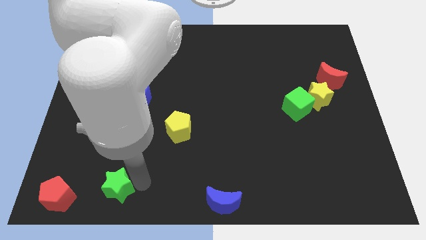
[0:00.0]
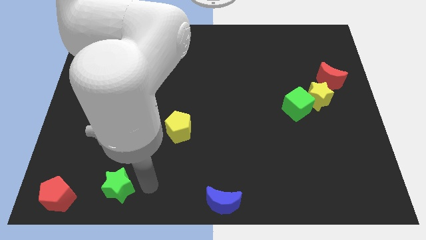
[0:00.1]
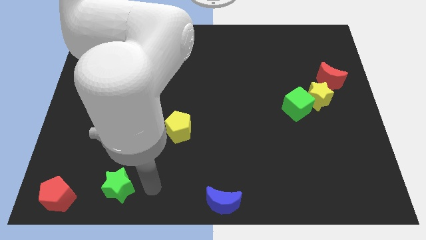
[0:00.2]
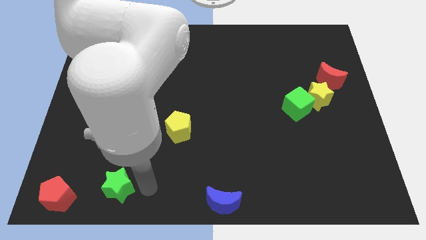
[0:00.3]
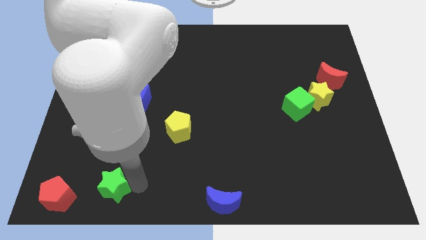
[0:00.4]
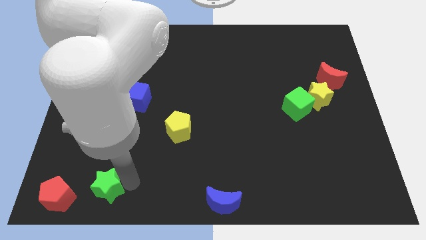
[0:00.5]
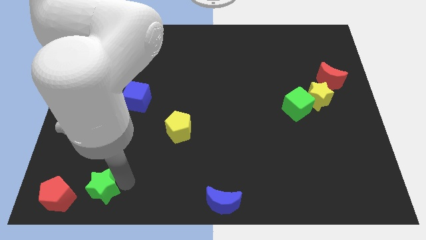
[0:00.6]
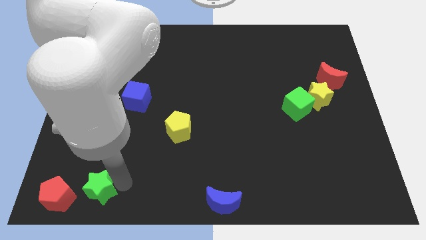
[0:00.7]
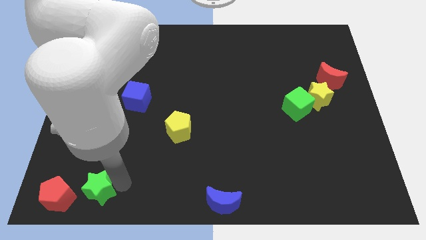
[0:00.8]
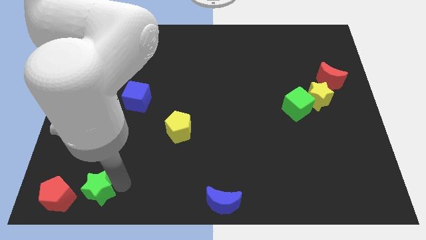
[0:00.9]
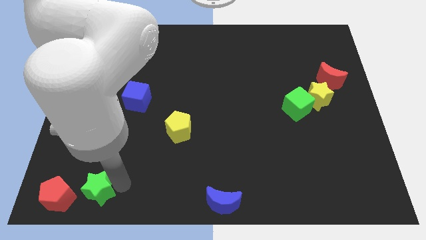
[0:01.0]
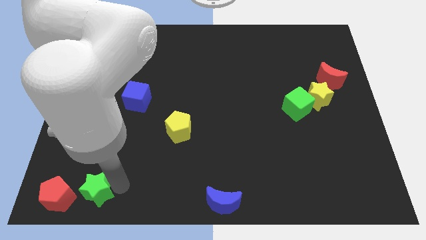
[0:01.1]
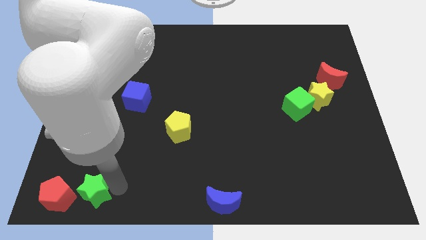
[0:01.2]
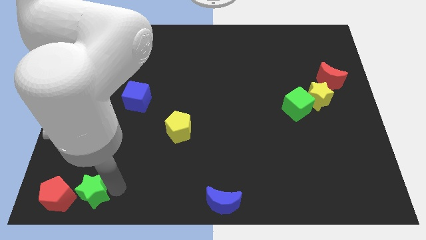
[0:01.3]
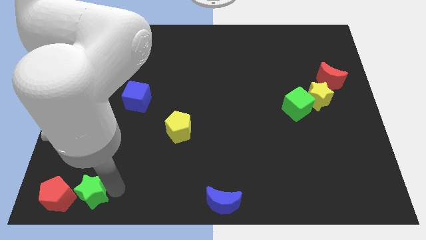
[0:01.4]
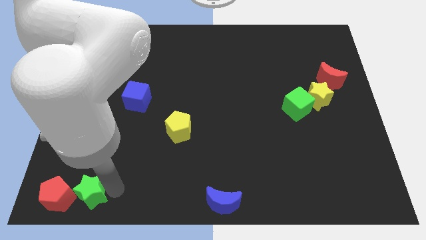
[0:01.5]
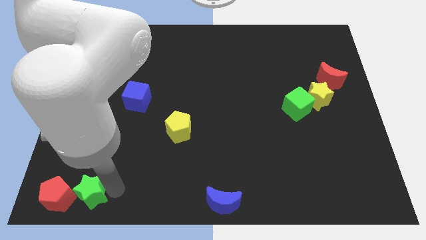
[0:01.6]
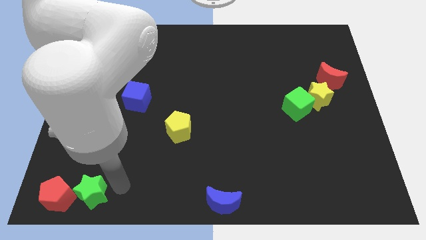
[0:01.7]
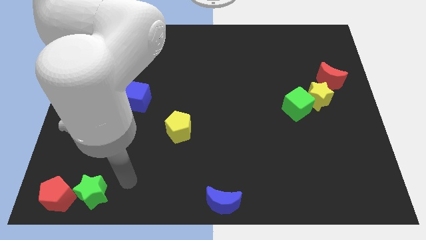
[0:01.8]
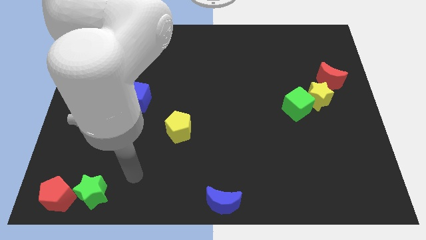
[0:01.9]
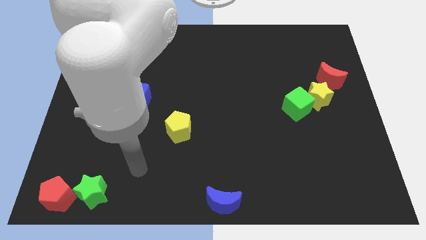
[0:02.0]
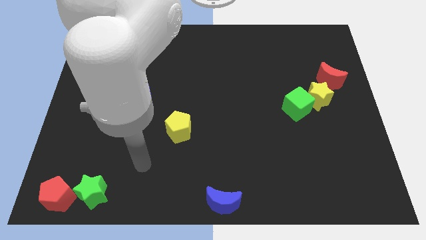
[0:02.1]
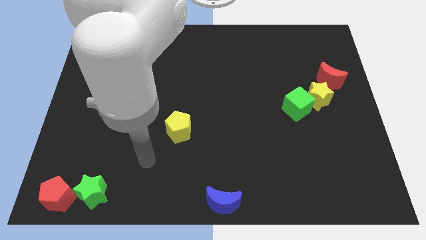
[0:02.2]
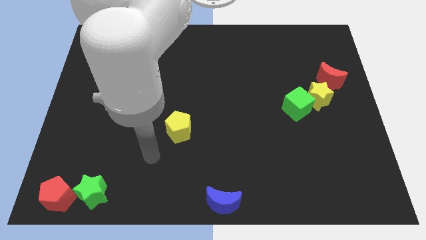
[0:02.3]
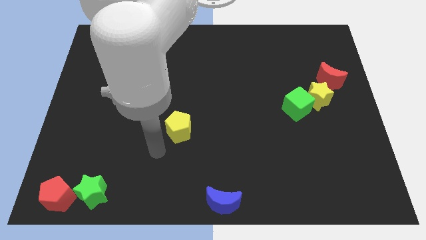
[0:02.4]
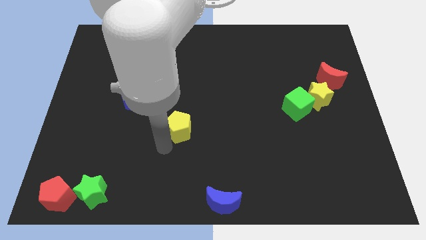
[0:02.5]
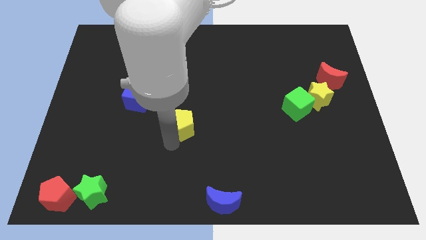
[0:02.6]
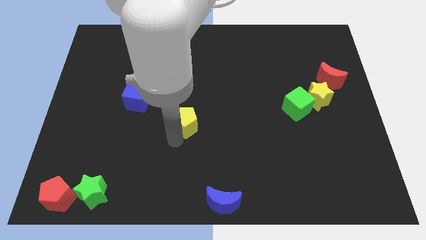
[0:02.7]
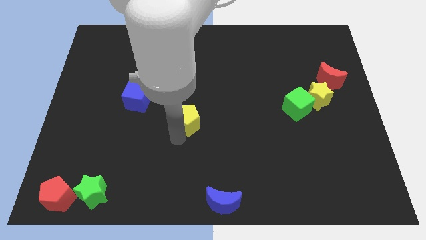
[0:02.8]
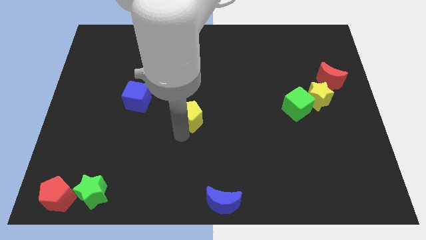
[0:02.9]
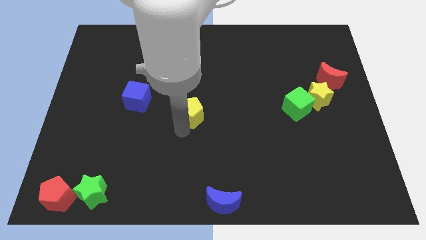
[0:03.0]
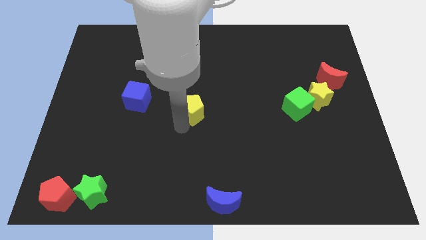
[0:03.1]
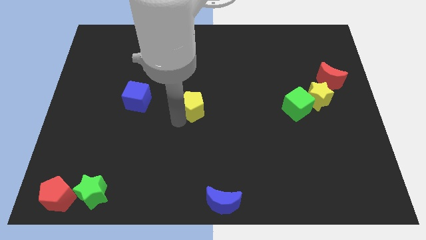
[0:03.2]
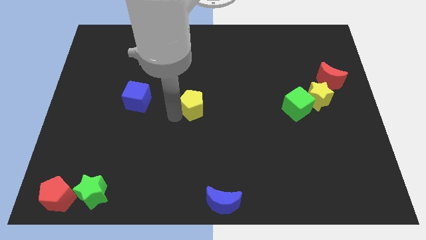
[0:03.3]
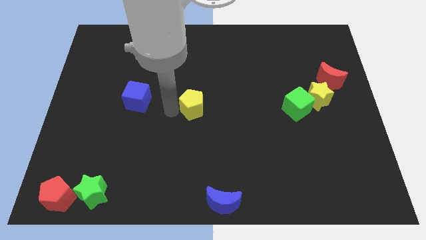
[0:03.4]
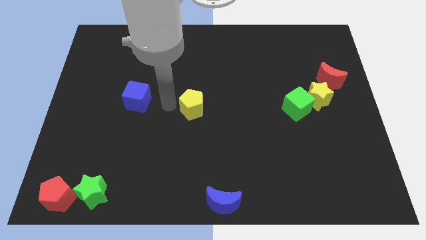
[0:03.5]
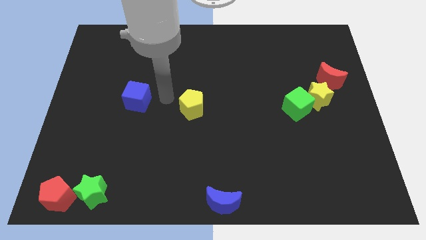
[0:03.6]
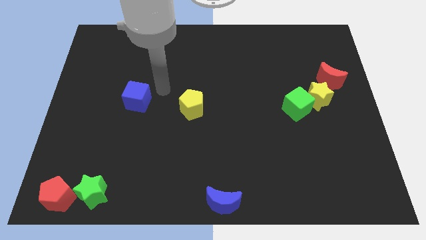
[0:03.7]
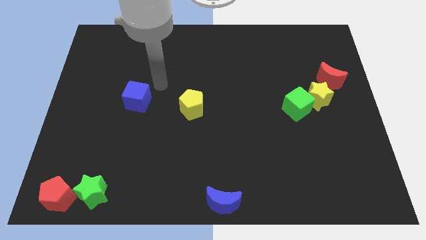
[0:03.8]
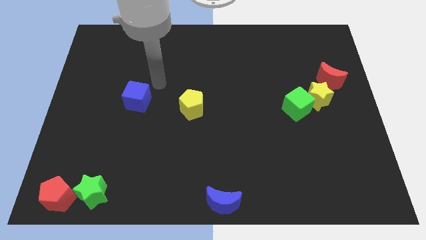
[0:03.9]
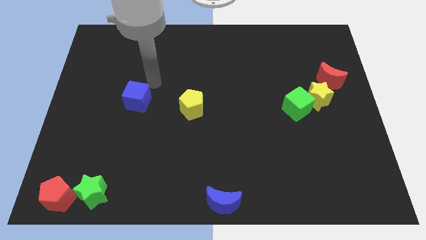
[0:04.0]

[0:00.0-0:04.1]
move yellow pentagon slightly up

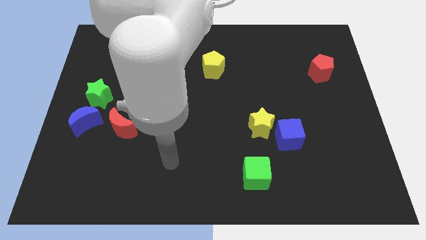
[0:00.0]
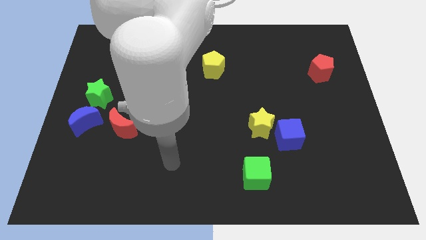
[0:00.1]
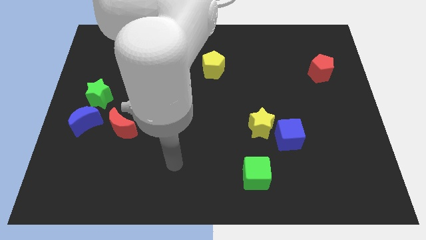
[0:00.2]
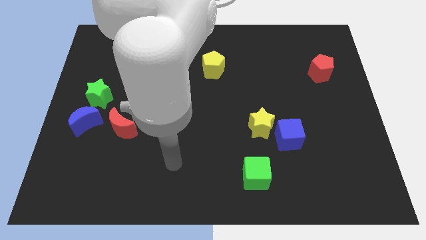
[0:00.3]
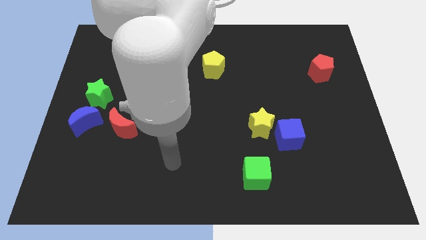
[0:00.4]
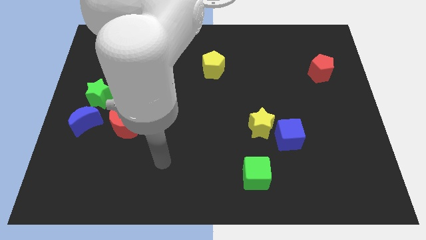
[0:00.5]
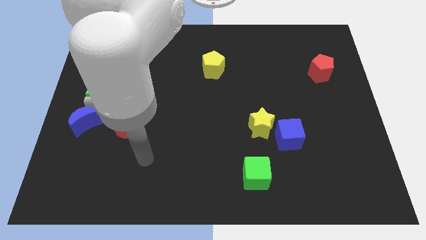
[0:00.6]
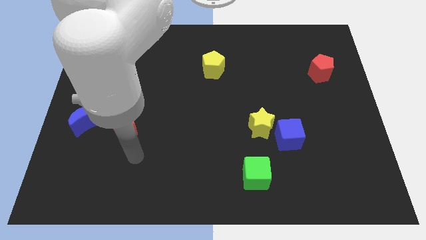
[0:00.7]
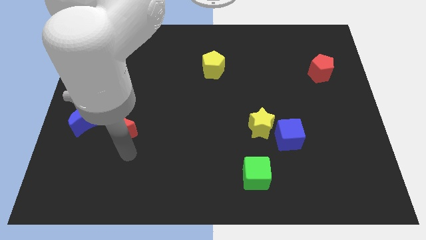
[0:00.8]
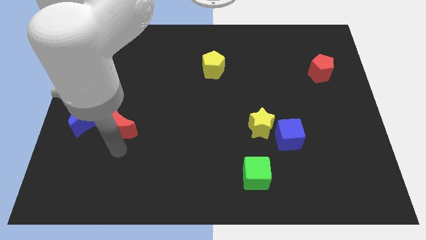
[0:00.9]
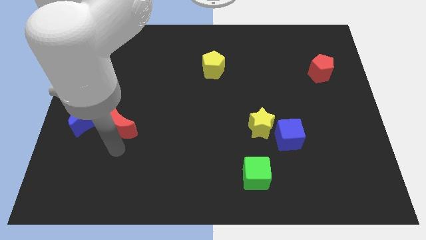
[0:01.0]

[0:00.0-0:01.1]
move yourself to the bottom of the red crescent

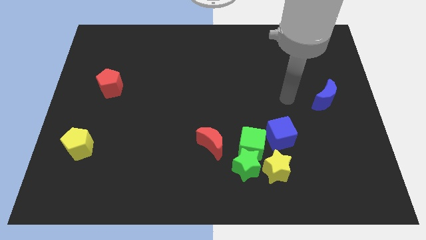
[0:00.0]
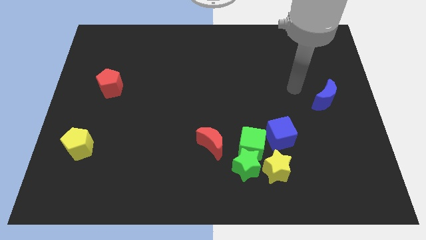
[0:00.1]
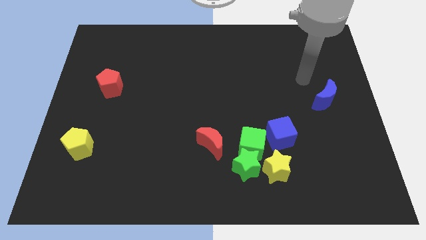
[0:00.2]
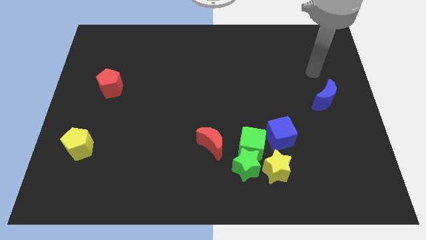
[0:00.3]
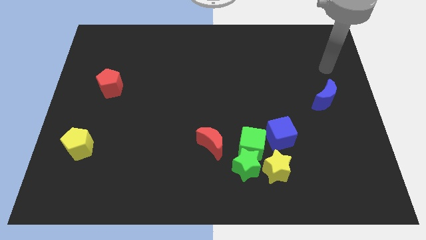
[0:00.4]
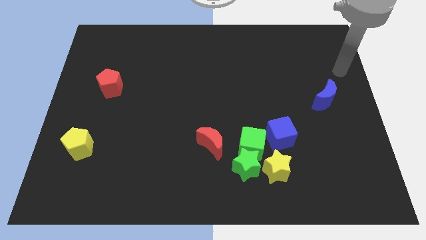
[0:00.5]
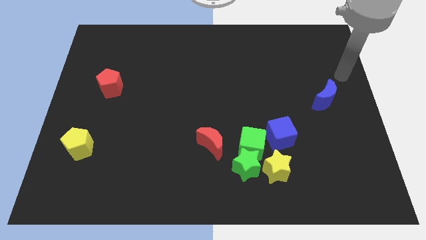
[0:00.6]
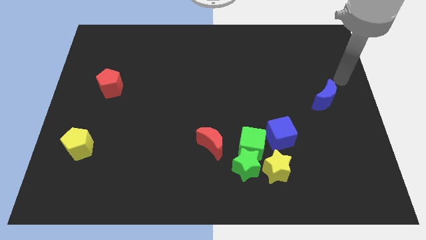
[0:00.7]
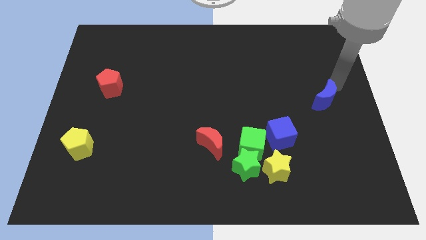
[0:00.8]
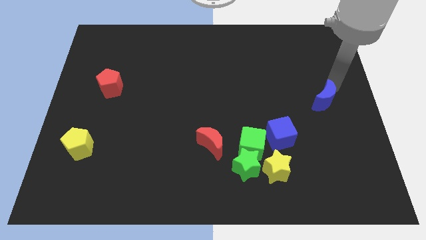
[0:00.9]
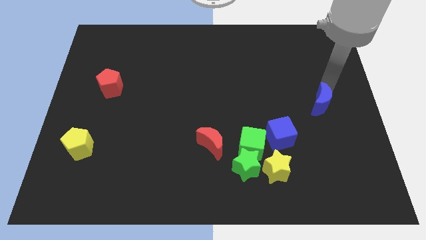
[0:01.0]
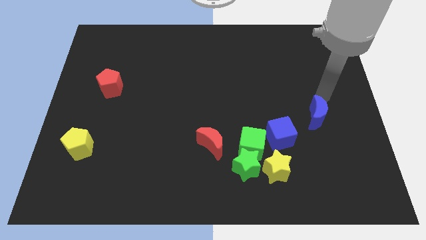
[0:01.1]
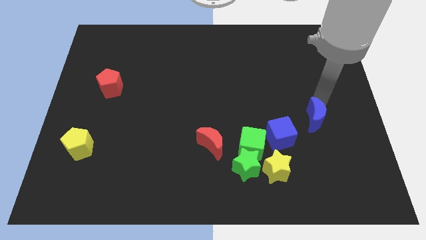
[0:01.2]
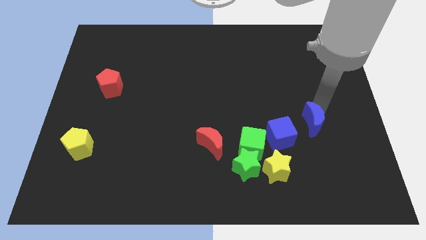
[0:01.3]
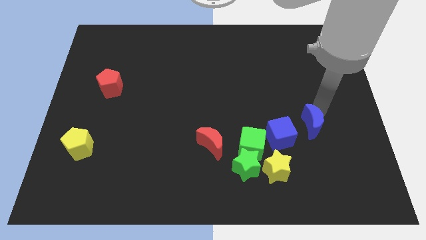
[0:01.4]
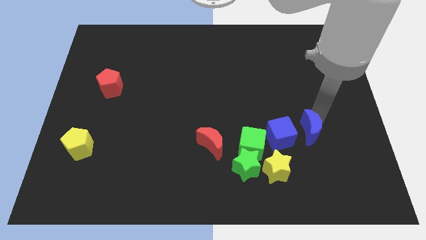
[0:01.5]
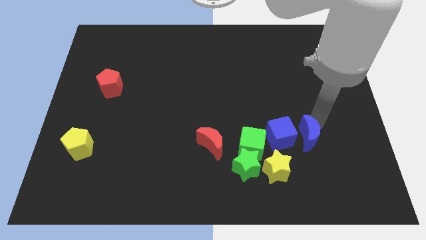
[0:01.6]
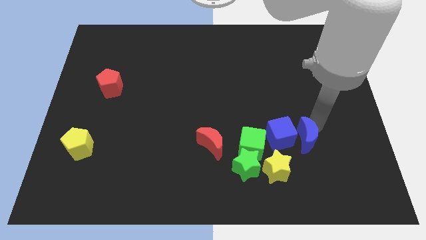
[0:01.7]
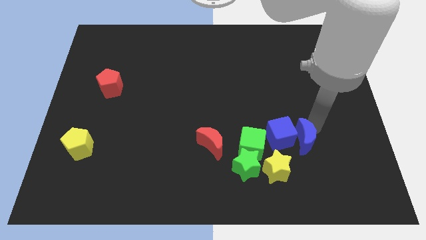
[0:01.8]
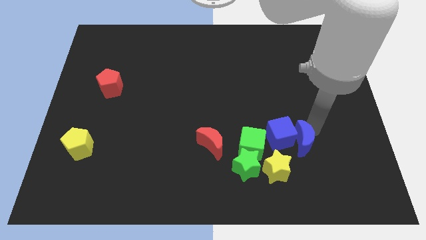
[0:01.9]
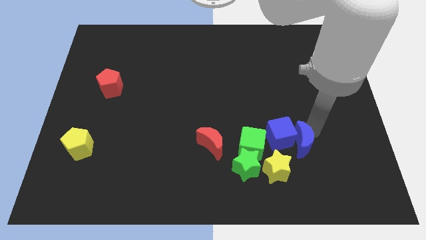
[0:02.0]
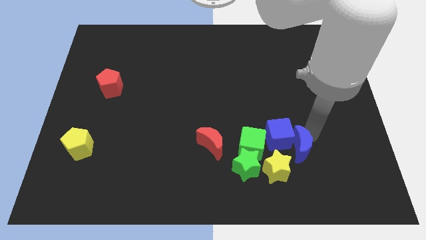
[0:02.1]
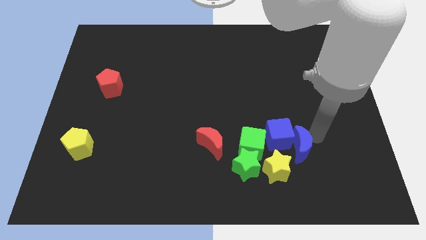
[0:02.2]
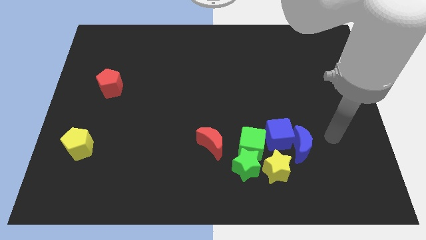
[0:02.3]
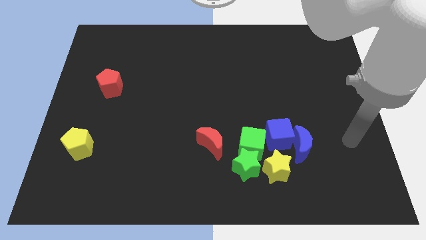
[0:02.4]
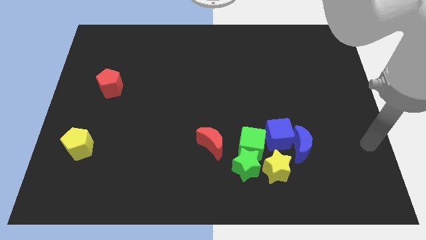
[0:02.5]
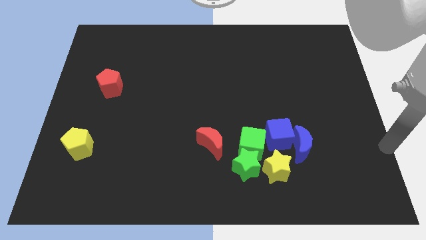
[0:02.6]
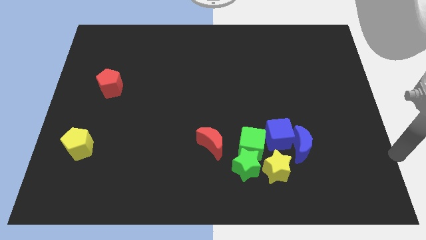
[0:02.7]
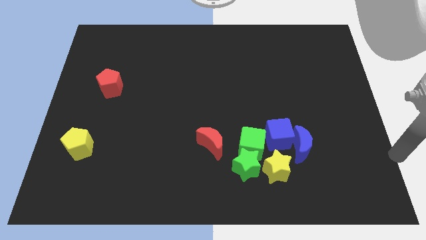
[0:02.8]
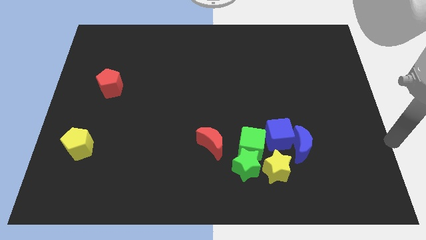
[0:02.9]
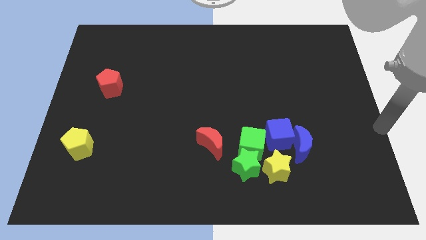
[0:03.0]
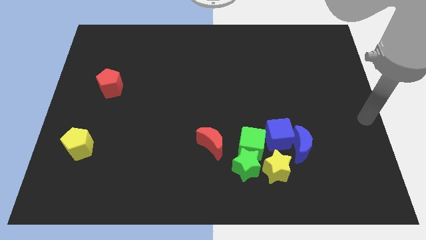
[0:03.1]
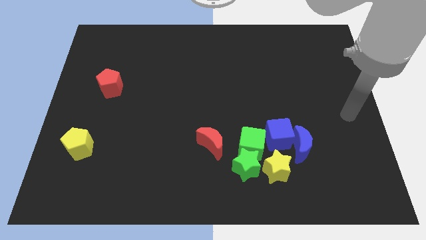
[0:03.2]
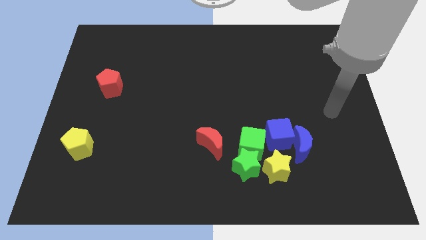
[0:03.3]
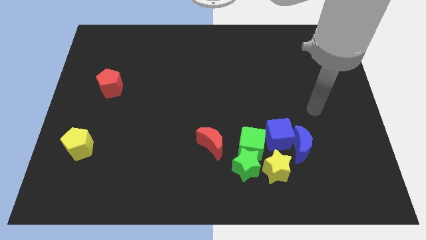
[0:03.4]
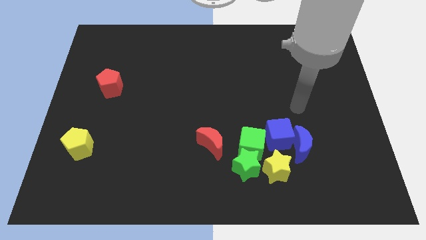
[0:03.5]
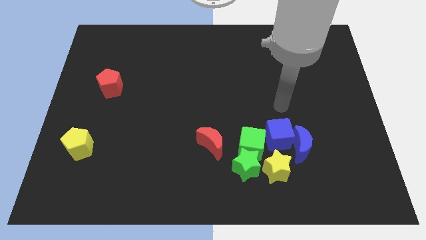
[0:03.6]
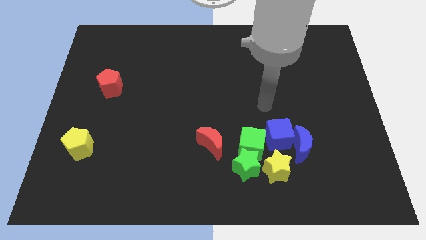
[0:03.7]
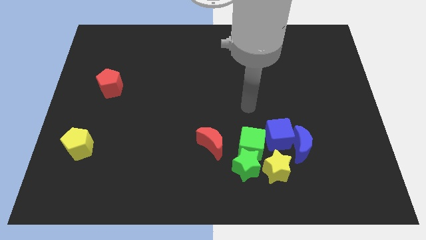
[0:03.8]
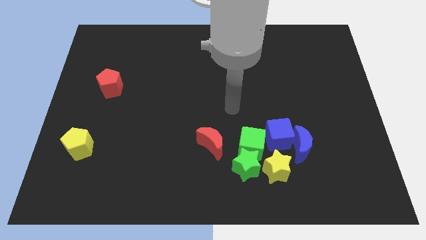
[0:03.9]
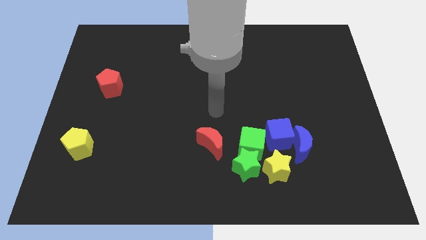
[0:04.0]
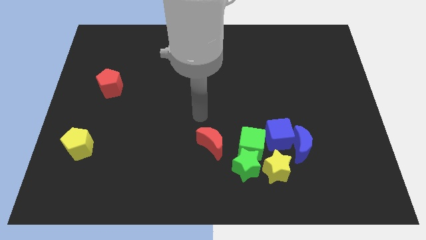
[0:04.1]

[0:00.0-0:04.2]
push the blue crescent into the blue cube
